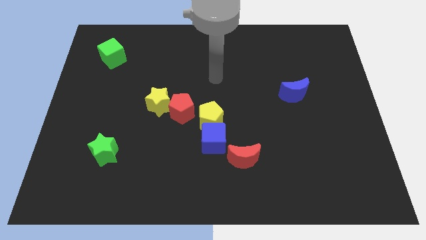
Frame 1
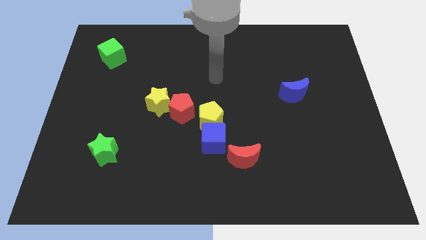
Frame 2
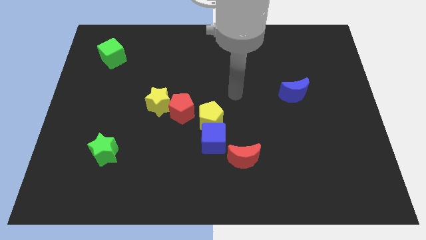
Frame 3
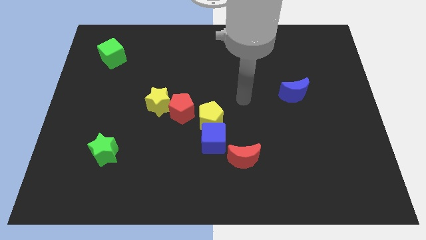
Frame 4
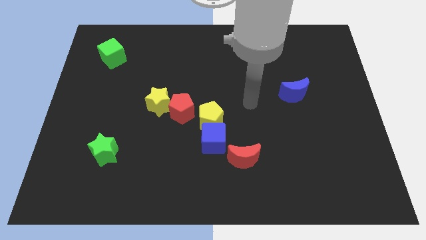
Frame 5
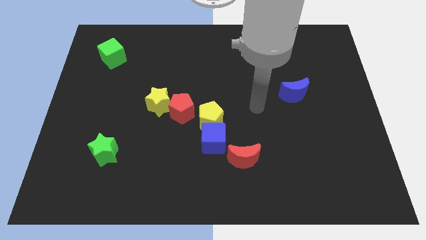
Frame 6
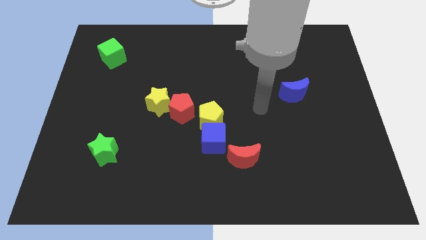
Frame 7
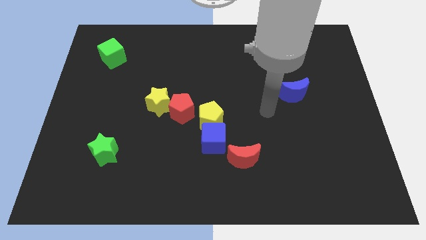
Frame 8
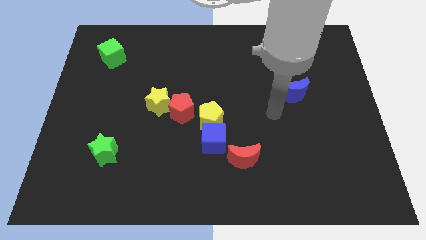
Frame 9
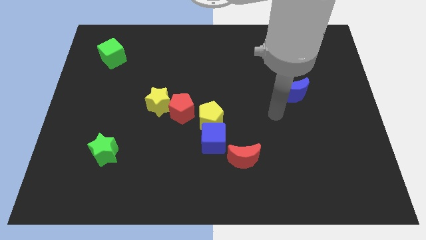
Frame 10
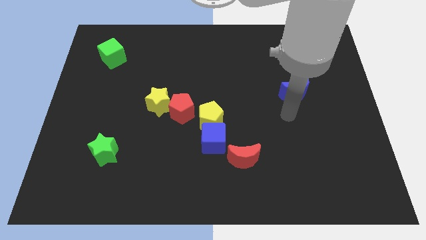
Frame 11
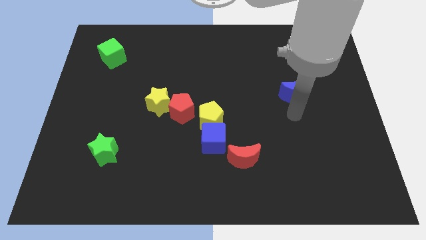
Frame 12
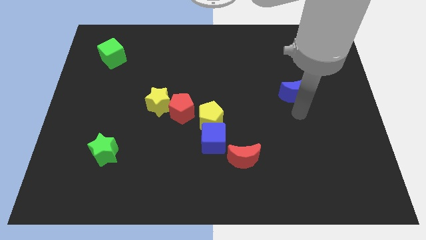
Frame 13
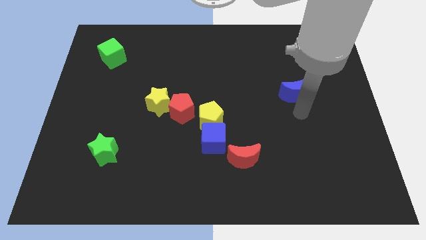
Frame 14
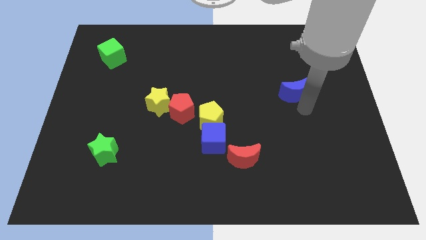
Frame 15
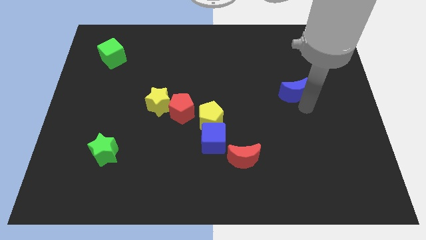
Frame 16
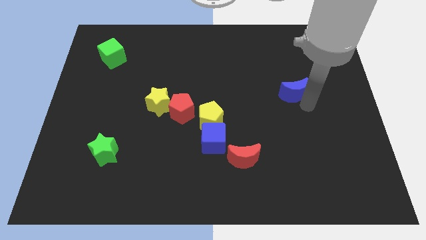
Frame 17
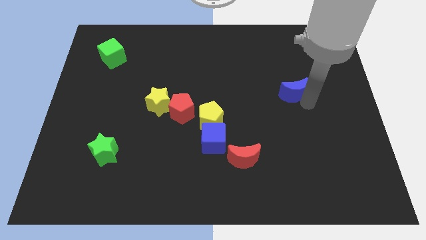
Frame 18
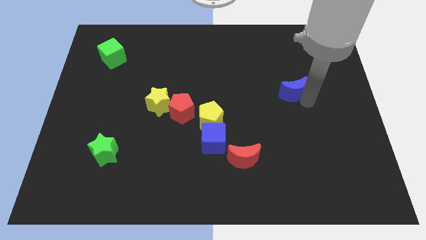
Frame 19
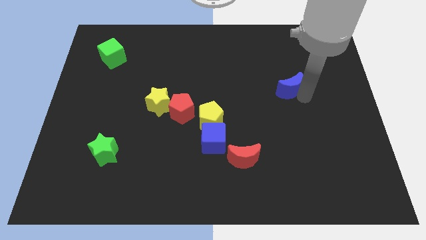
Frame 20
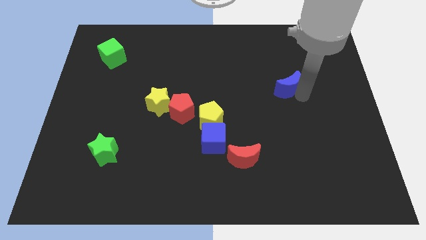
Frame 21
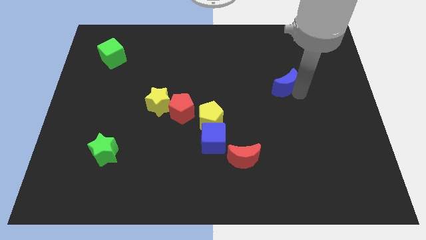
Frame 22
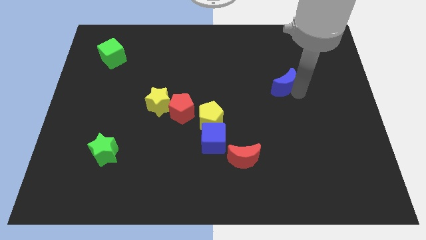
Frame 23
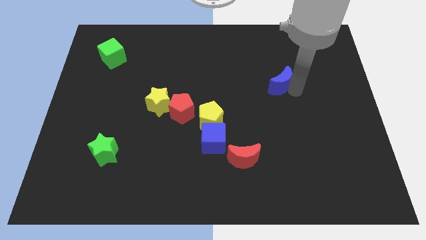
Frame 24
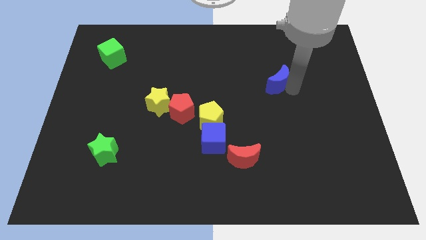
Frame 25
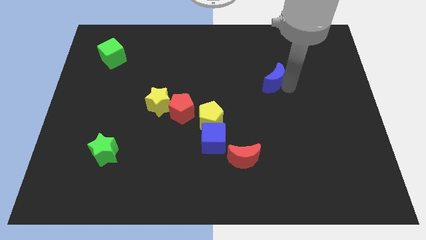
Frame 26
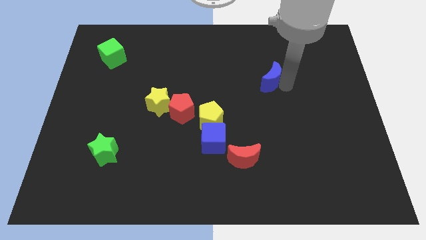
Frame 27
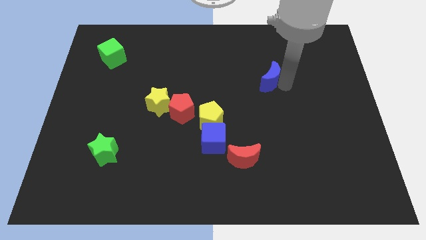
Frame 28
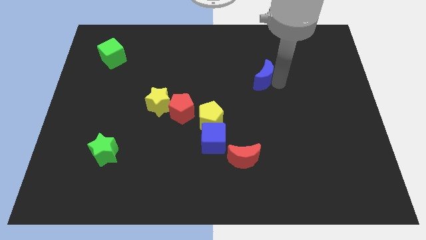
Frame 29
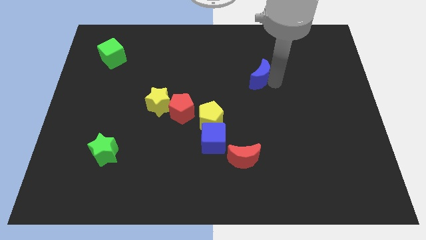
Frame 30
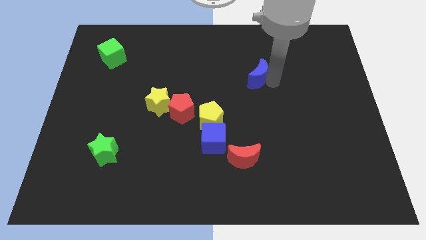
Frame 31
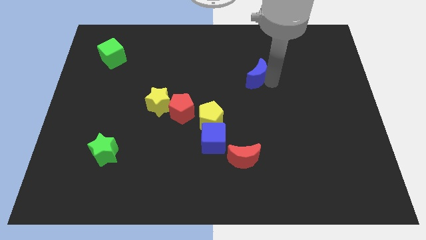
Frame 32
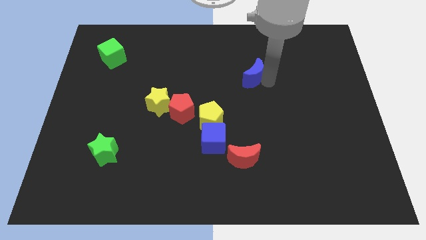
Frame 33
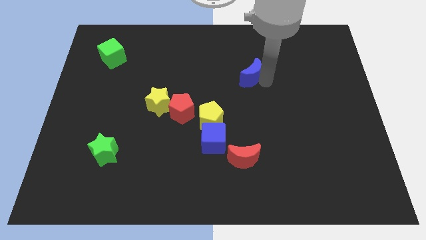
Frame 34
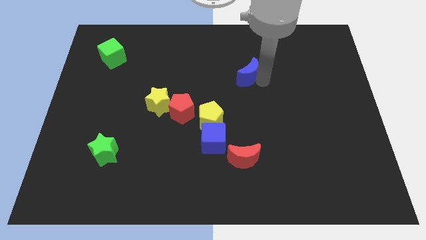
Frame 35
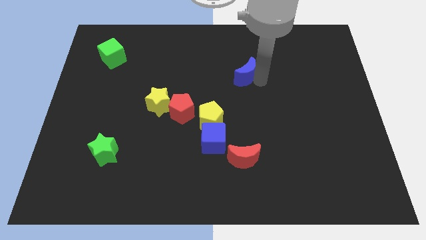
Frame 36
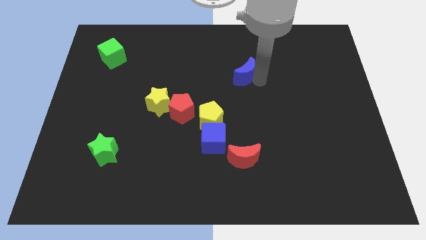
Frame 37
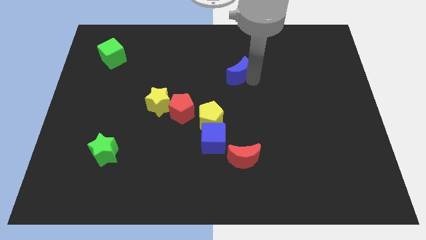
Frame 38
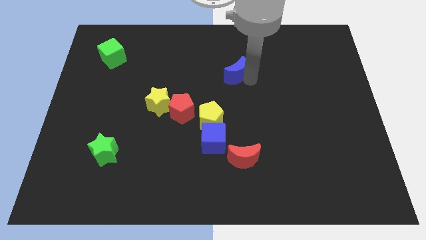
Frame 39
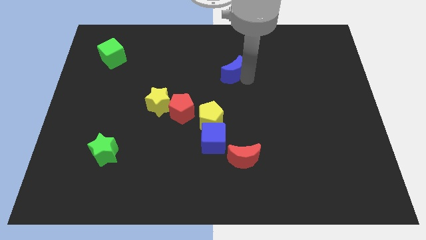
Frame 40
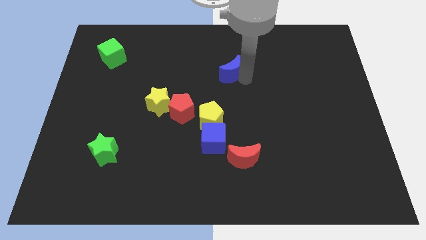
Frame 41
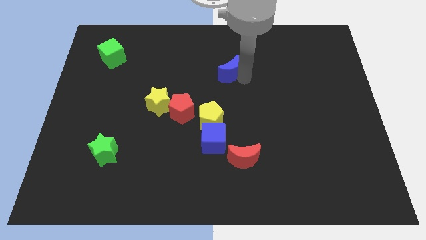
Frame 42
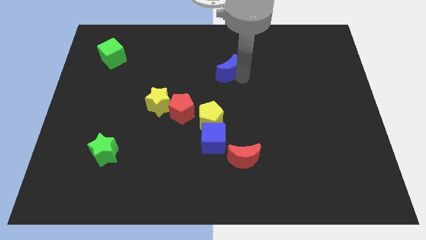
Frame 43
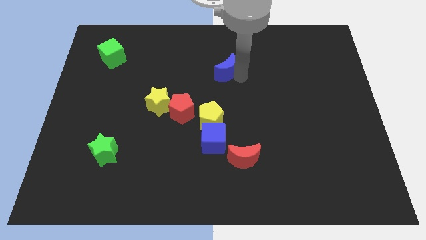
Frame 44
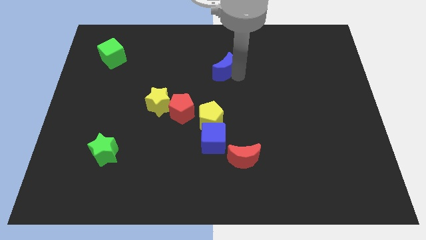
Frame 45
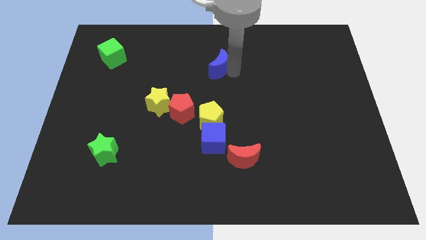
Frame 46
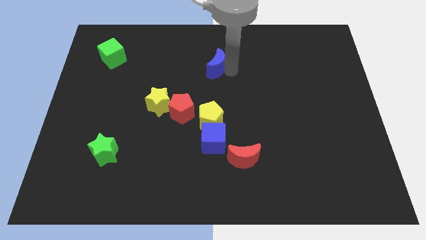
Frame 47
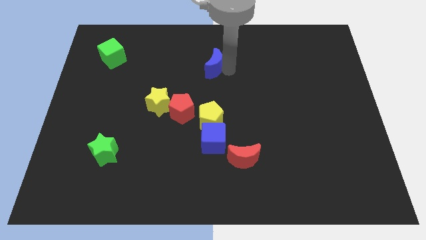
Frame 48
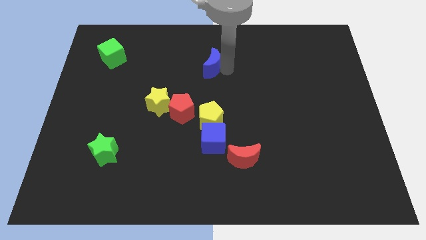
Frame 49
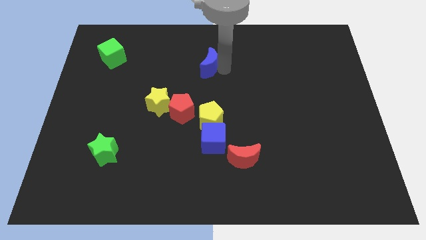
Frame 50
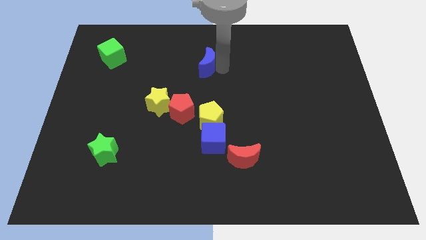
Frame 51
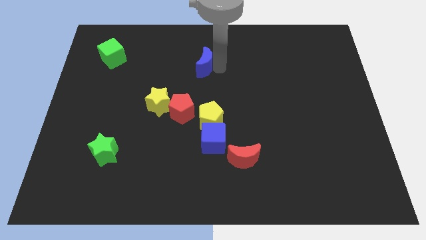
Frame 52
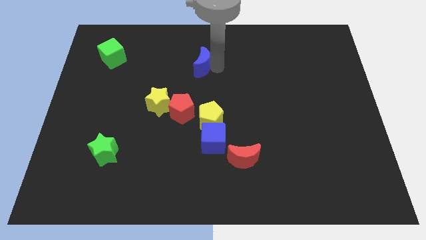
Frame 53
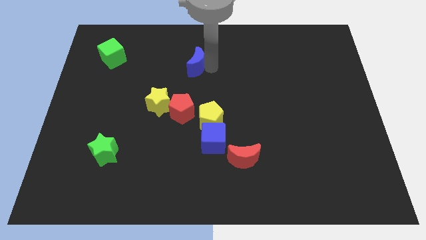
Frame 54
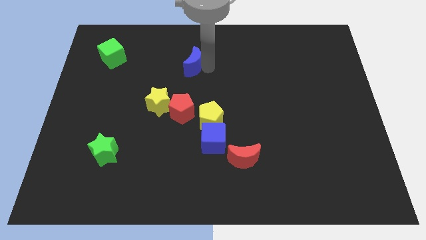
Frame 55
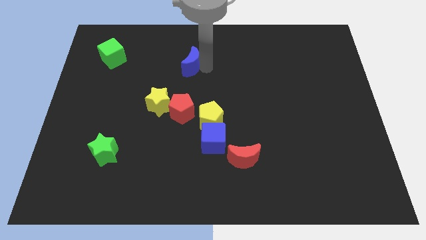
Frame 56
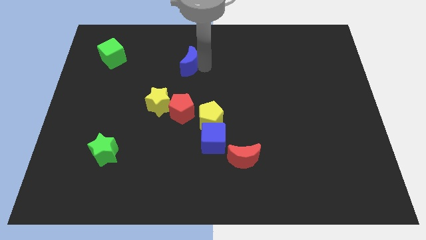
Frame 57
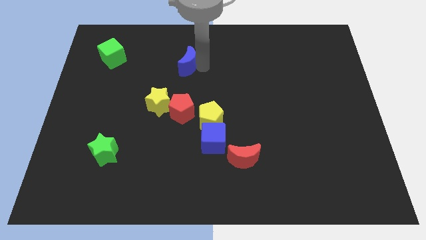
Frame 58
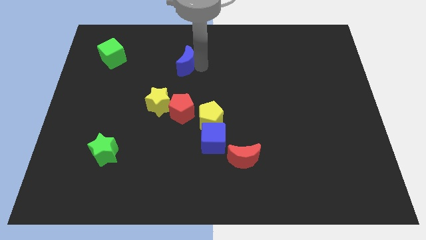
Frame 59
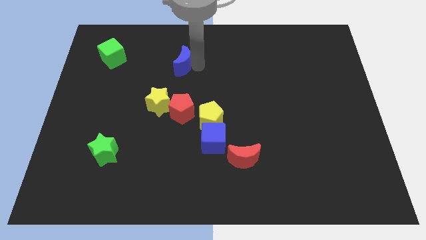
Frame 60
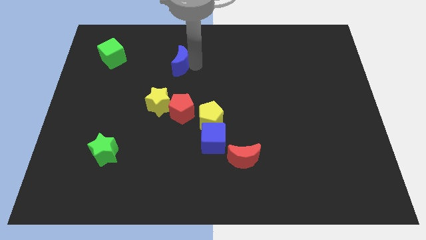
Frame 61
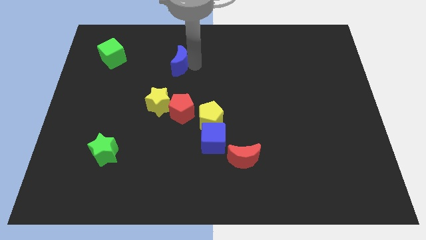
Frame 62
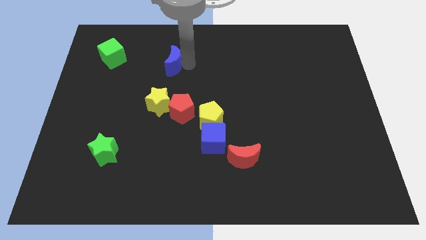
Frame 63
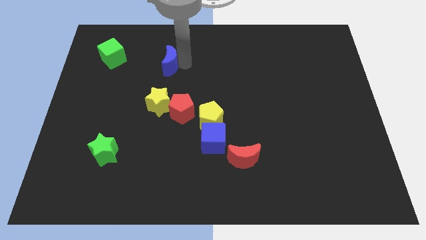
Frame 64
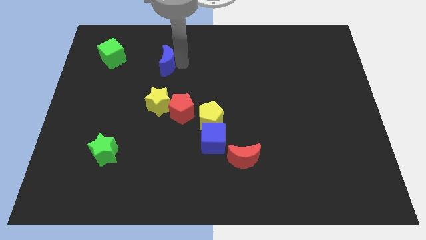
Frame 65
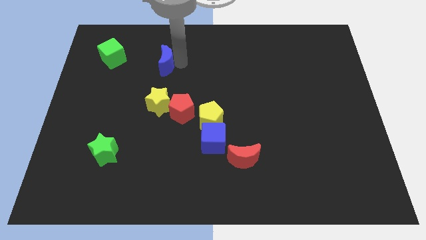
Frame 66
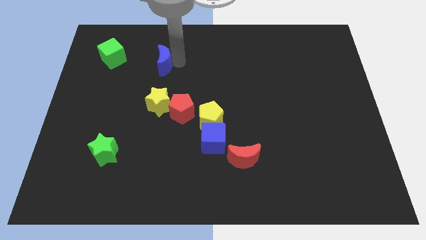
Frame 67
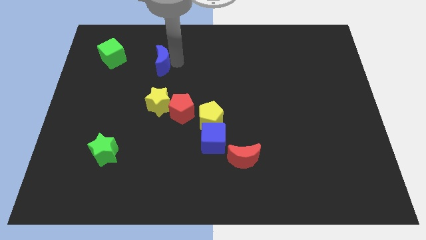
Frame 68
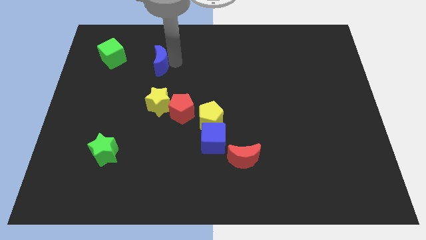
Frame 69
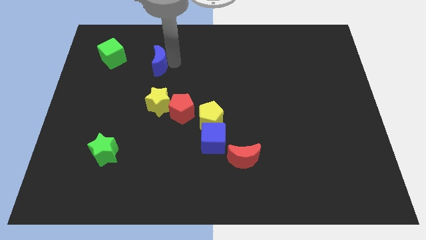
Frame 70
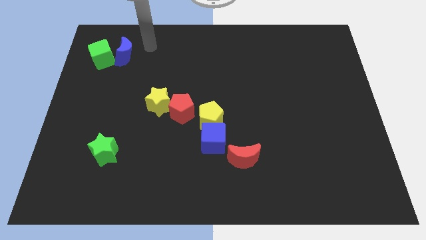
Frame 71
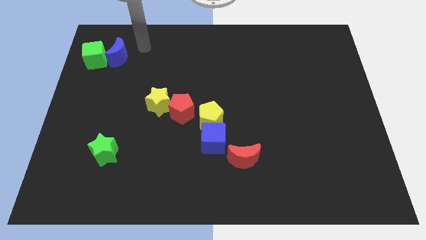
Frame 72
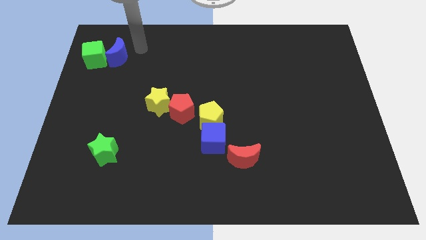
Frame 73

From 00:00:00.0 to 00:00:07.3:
push the blue moon to the green cube

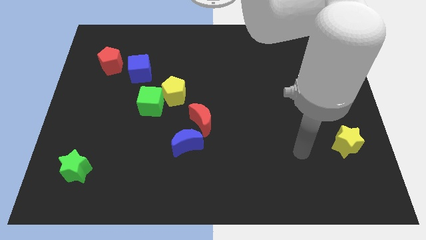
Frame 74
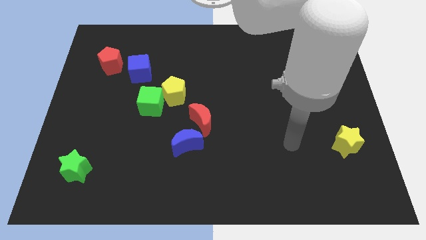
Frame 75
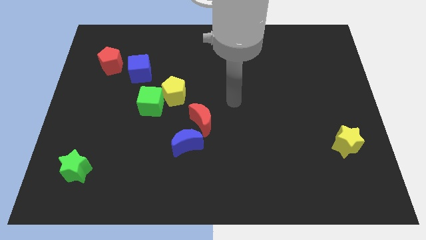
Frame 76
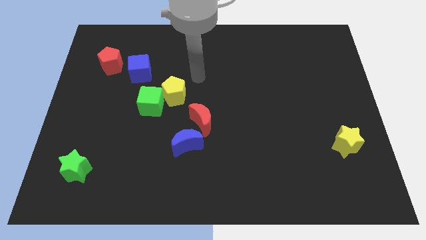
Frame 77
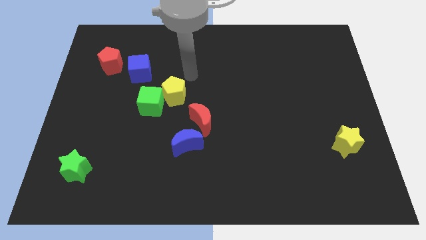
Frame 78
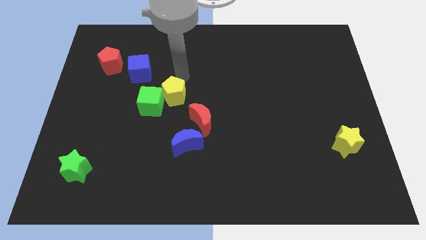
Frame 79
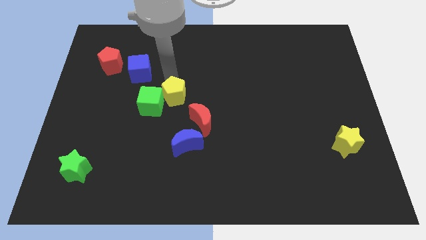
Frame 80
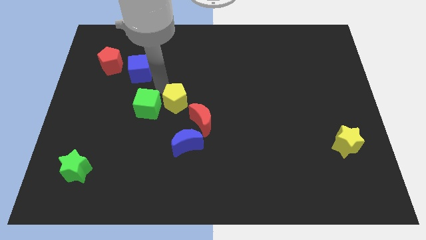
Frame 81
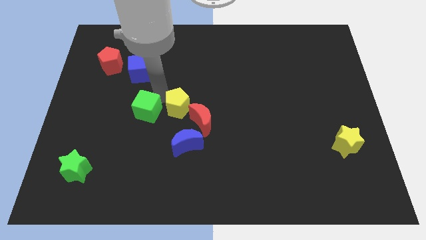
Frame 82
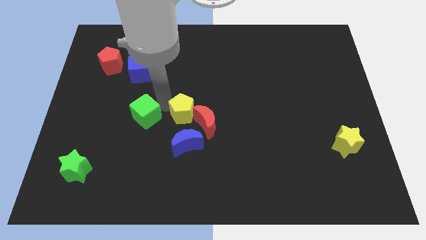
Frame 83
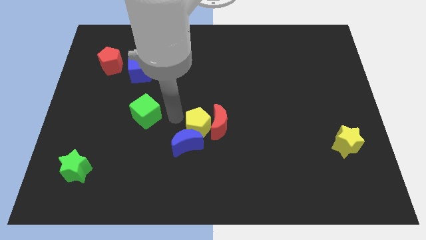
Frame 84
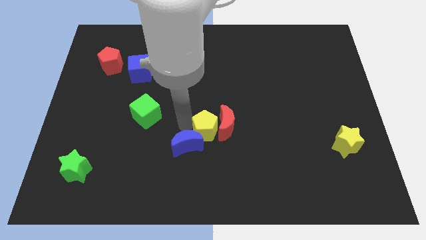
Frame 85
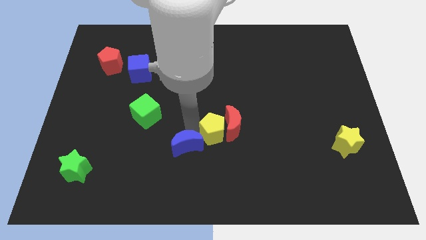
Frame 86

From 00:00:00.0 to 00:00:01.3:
put the yellow pentagon towards the red moon

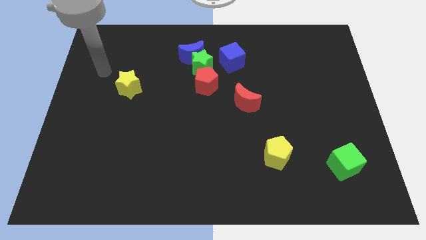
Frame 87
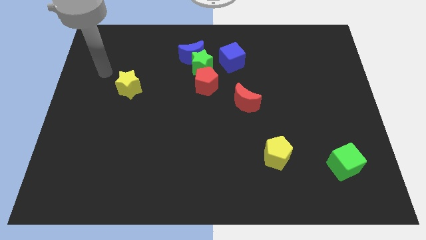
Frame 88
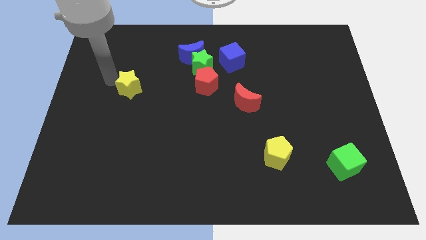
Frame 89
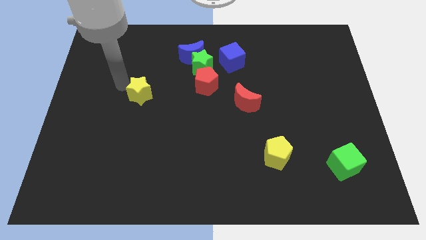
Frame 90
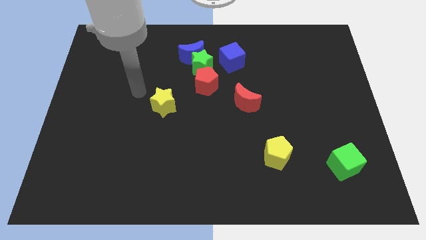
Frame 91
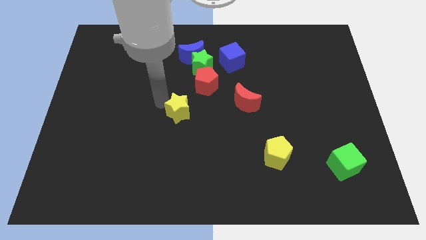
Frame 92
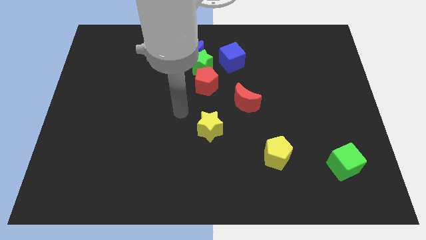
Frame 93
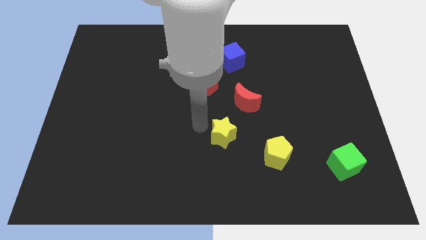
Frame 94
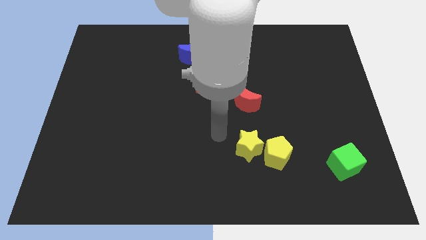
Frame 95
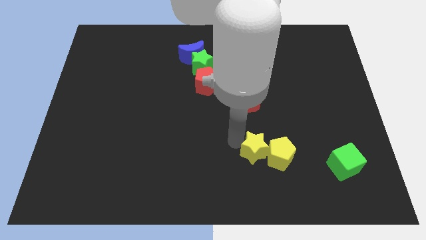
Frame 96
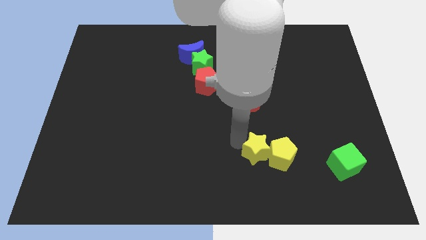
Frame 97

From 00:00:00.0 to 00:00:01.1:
slide the yellow star to the yellow pentagon
